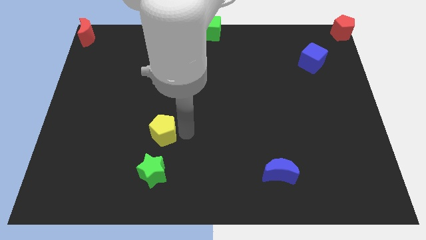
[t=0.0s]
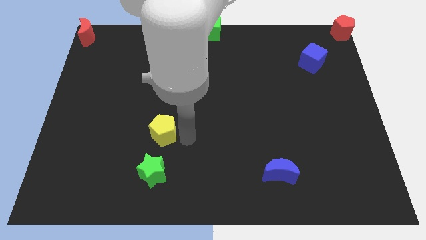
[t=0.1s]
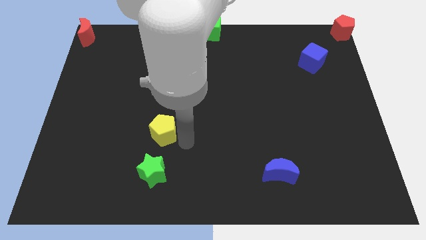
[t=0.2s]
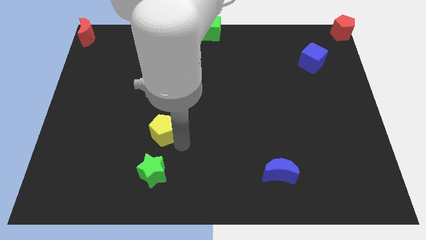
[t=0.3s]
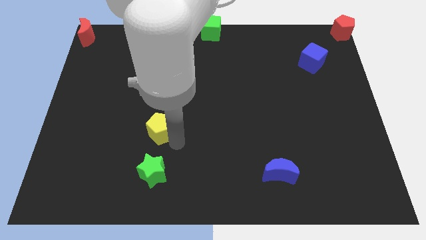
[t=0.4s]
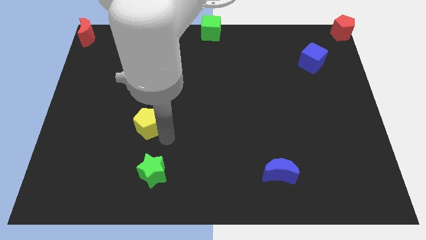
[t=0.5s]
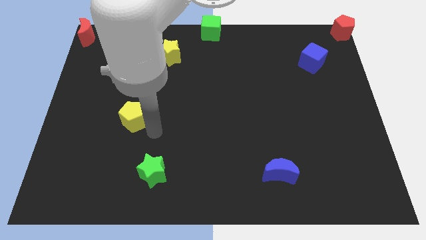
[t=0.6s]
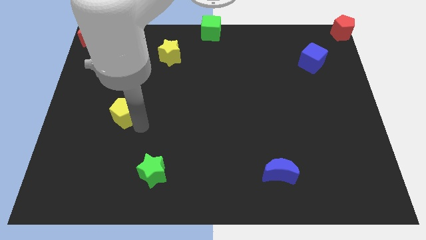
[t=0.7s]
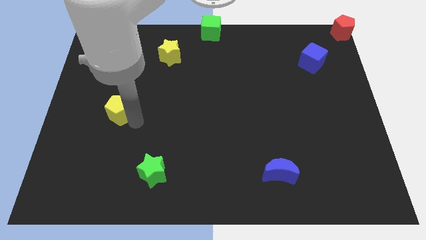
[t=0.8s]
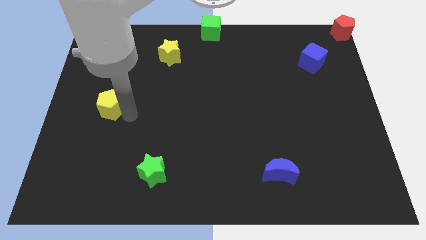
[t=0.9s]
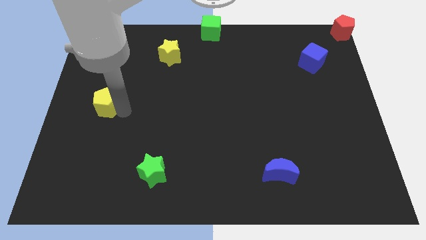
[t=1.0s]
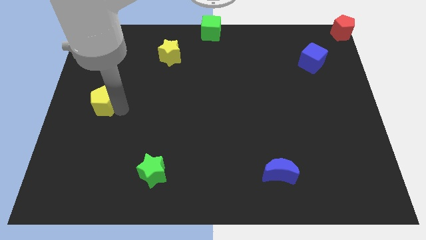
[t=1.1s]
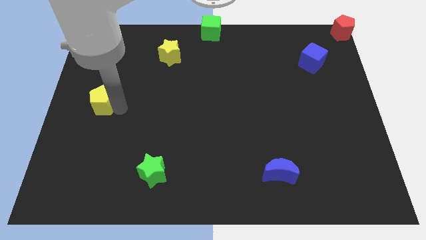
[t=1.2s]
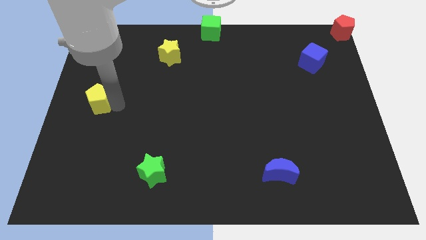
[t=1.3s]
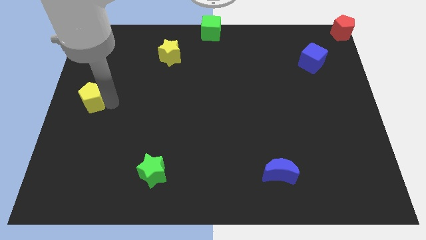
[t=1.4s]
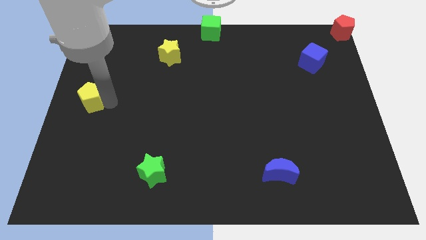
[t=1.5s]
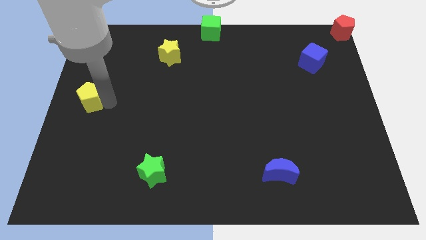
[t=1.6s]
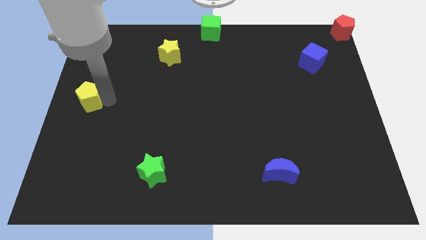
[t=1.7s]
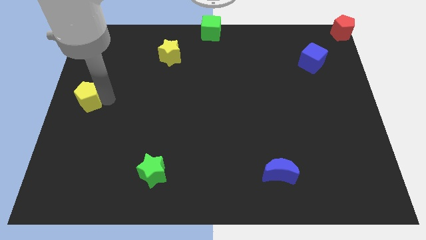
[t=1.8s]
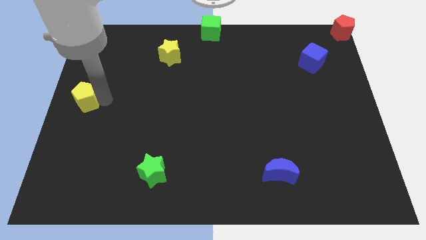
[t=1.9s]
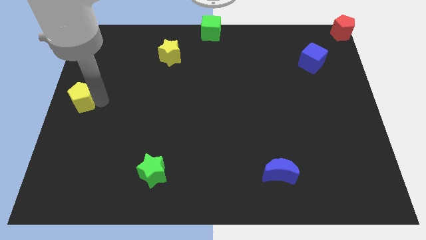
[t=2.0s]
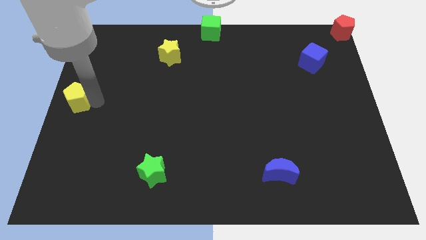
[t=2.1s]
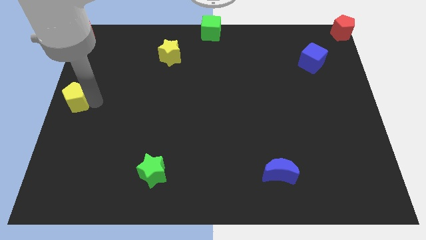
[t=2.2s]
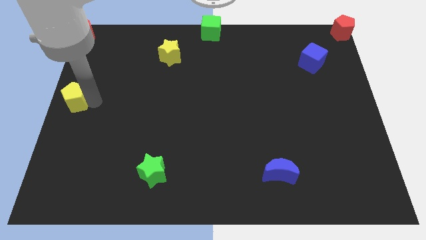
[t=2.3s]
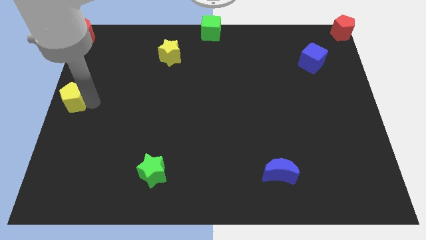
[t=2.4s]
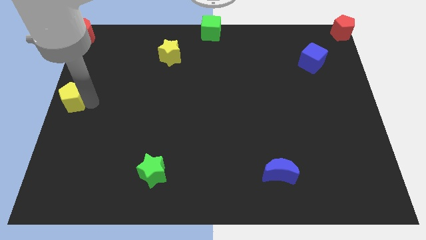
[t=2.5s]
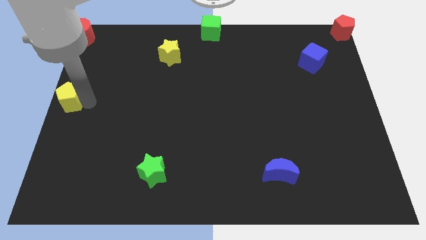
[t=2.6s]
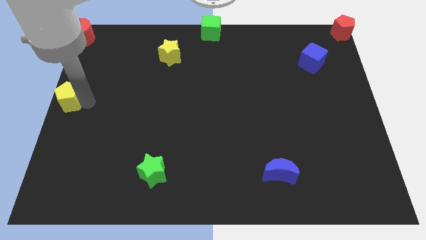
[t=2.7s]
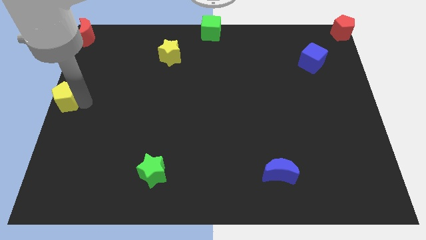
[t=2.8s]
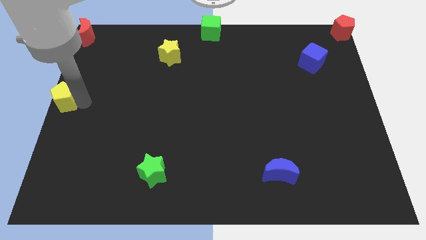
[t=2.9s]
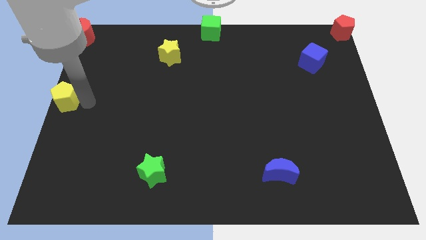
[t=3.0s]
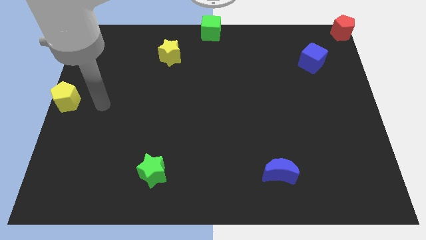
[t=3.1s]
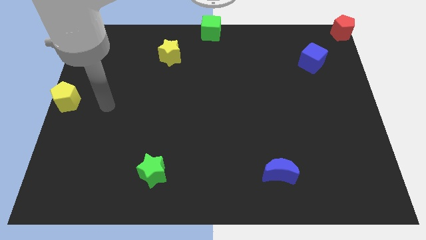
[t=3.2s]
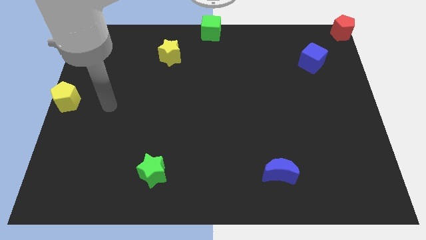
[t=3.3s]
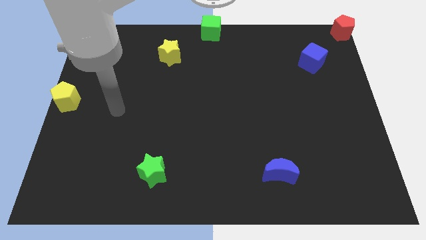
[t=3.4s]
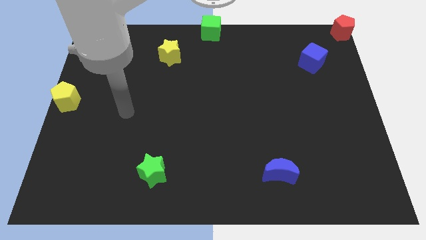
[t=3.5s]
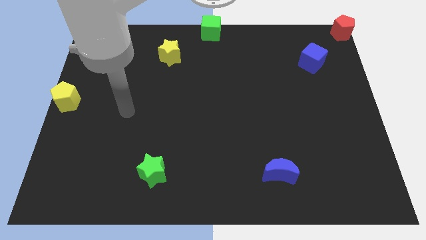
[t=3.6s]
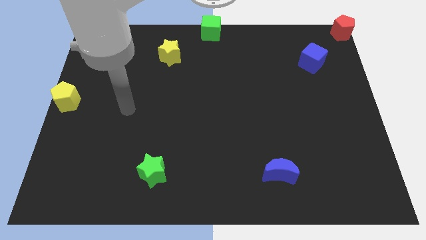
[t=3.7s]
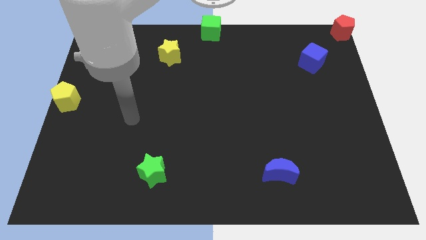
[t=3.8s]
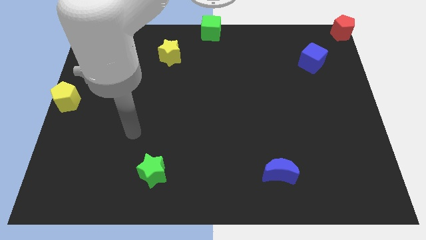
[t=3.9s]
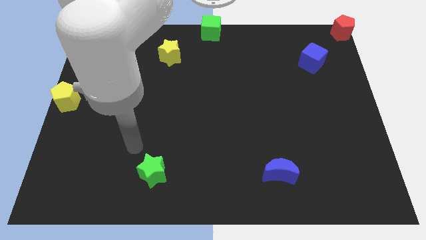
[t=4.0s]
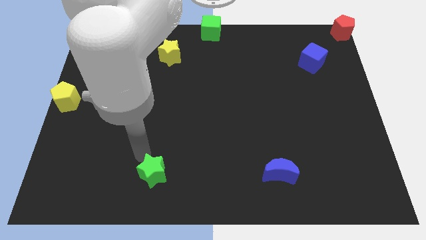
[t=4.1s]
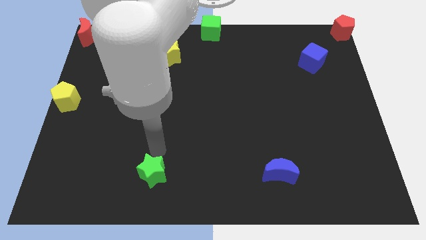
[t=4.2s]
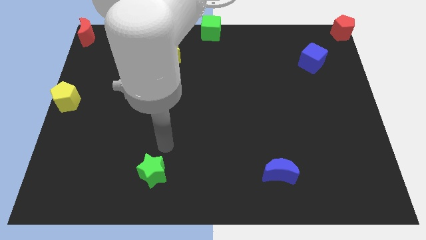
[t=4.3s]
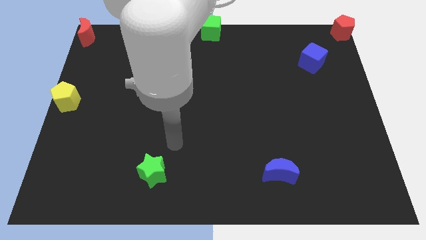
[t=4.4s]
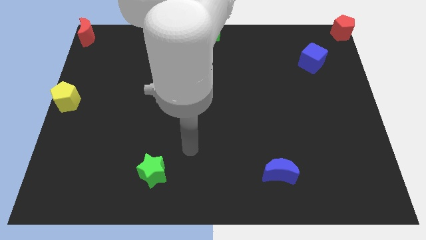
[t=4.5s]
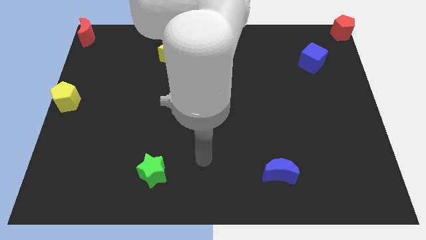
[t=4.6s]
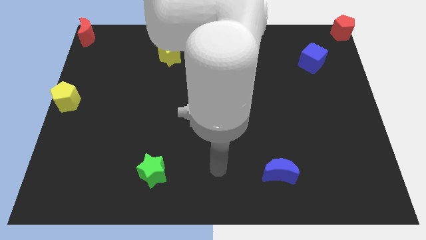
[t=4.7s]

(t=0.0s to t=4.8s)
place the yellow pentagon to middle left side of the board

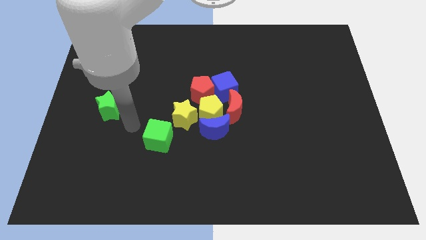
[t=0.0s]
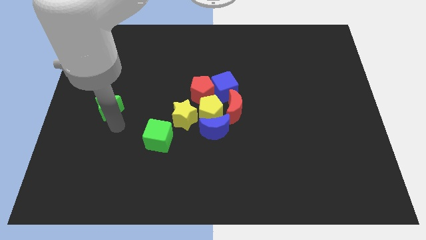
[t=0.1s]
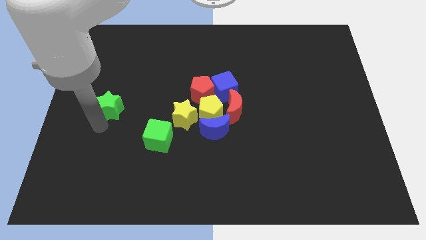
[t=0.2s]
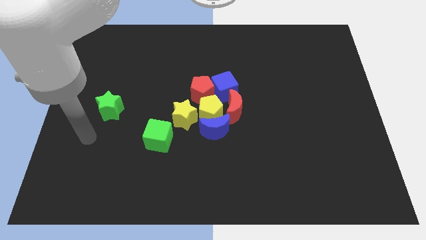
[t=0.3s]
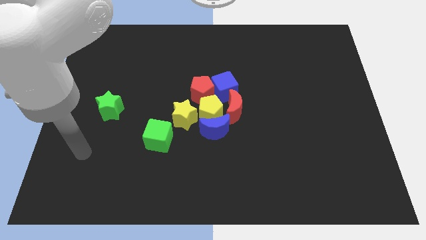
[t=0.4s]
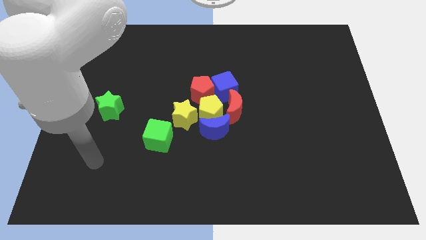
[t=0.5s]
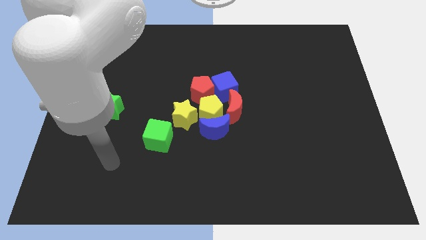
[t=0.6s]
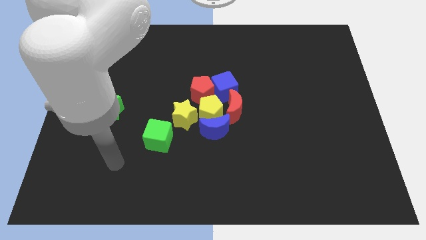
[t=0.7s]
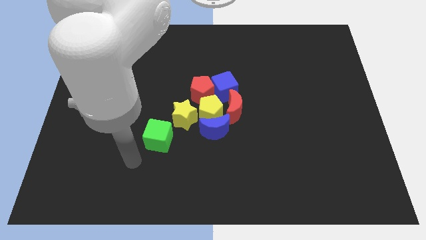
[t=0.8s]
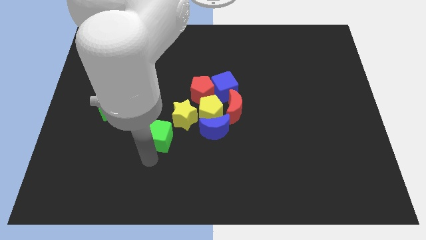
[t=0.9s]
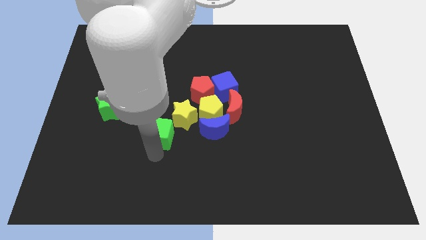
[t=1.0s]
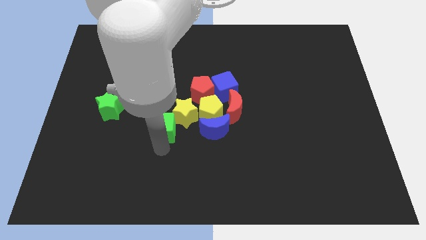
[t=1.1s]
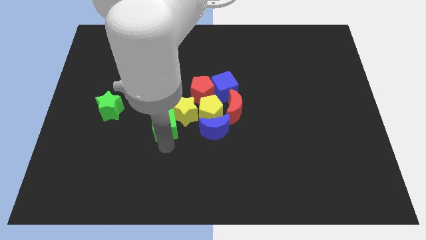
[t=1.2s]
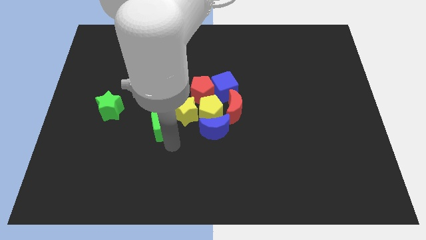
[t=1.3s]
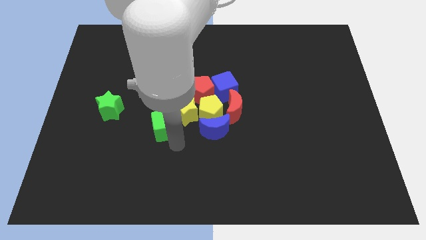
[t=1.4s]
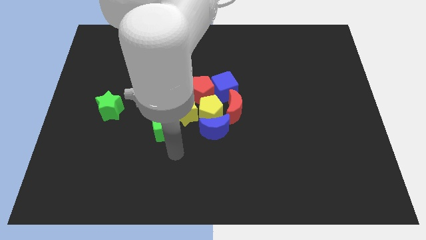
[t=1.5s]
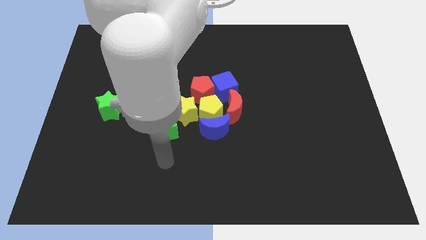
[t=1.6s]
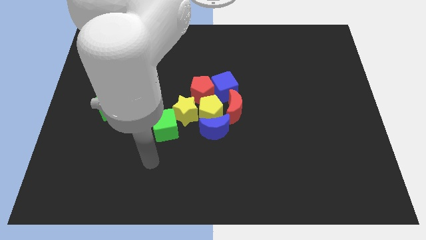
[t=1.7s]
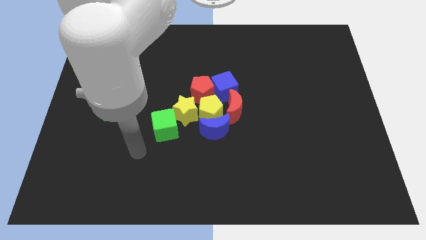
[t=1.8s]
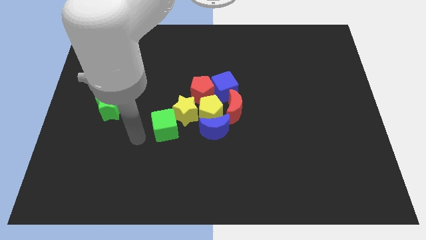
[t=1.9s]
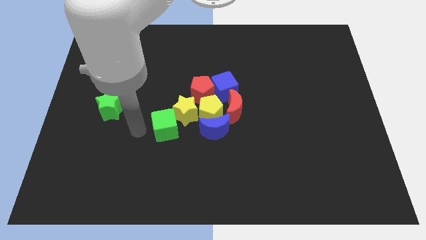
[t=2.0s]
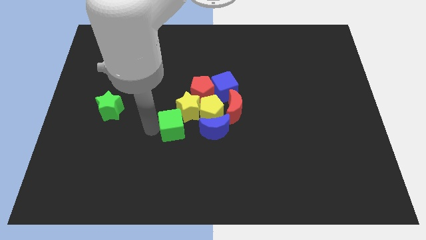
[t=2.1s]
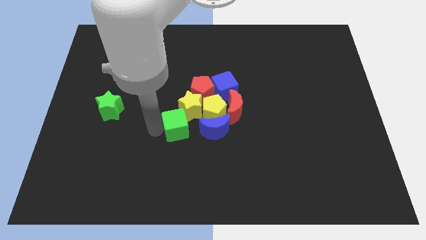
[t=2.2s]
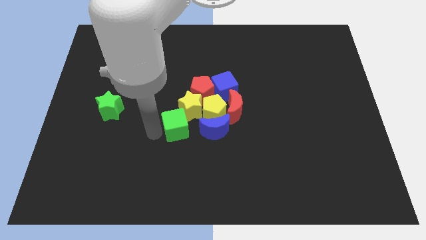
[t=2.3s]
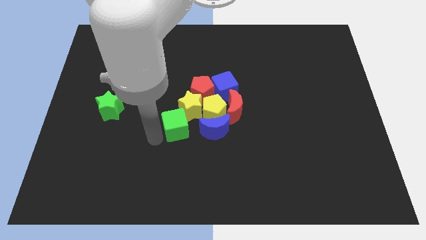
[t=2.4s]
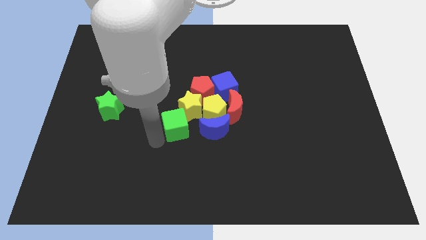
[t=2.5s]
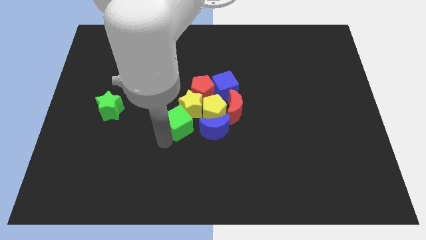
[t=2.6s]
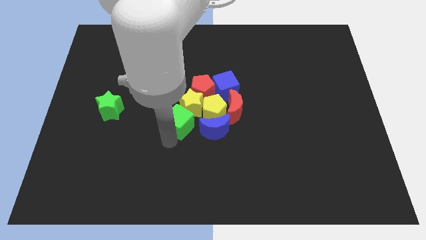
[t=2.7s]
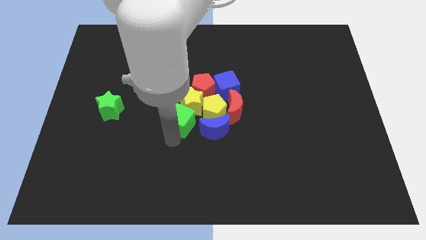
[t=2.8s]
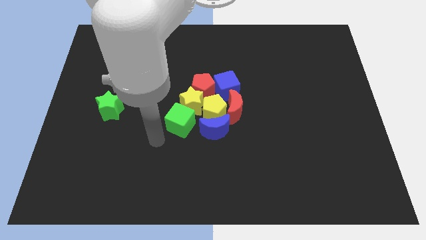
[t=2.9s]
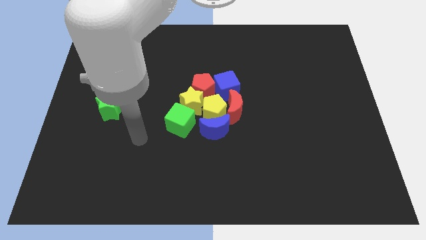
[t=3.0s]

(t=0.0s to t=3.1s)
push the green cube into the yellow star

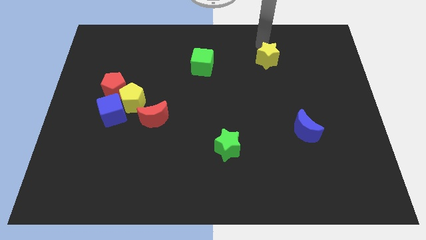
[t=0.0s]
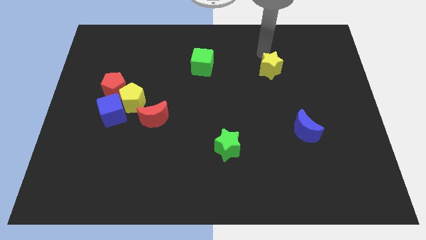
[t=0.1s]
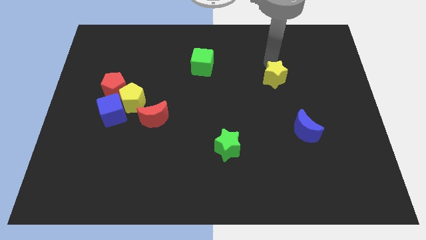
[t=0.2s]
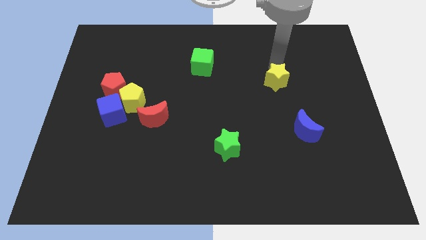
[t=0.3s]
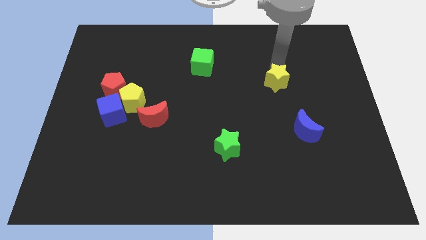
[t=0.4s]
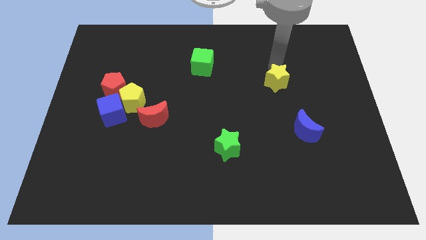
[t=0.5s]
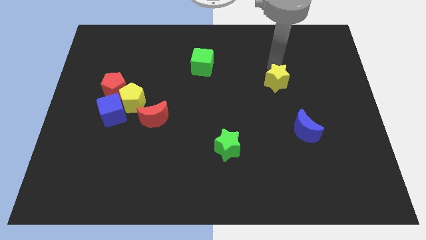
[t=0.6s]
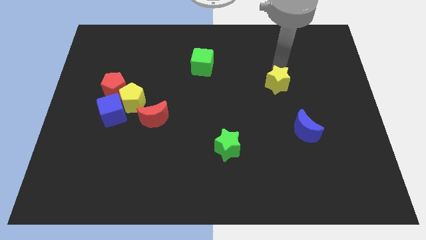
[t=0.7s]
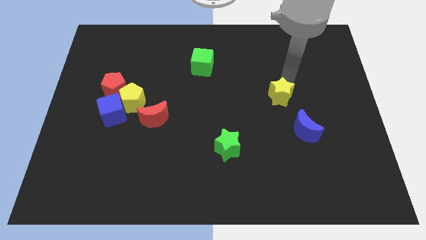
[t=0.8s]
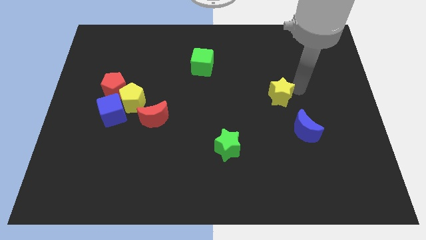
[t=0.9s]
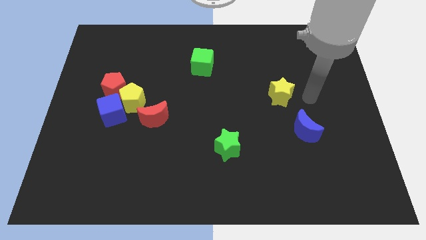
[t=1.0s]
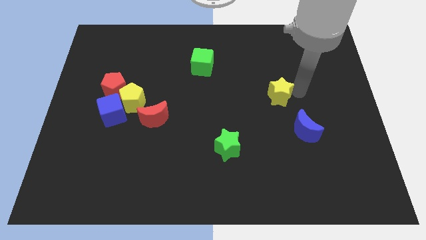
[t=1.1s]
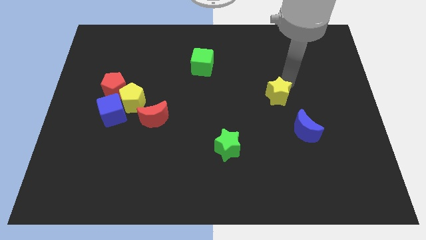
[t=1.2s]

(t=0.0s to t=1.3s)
move the yellow star diagonal to the blue moon
